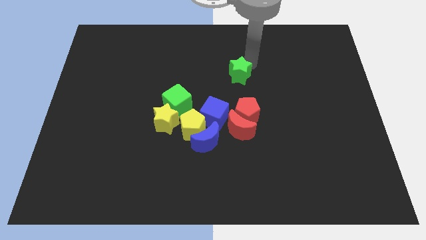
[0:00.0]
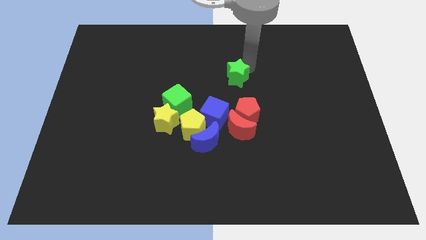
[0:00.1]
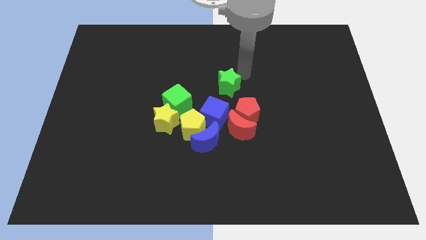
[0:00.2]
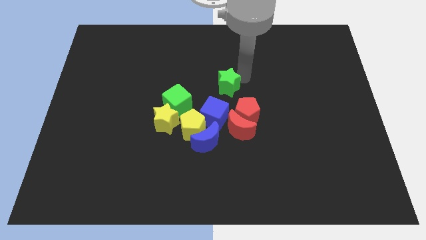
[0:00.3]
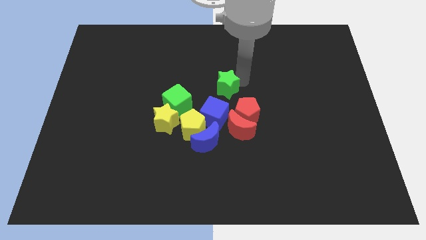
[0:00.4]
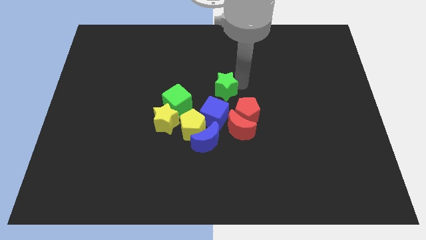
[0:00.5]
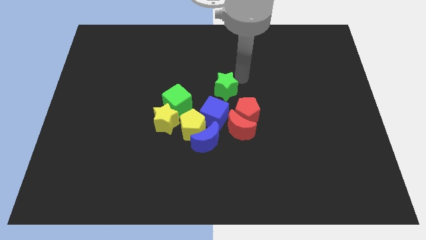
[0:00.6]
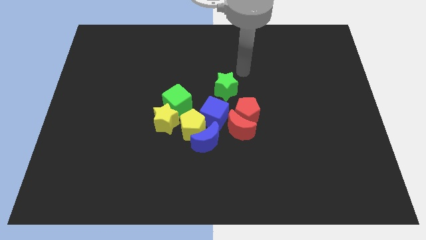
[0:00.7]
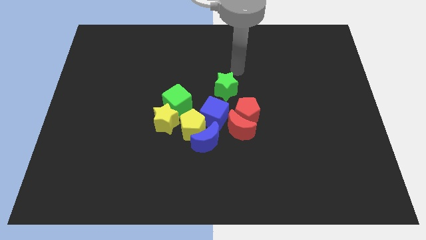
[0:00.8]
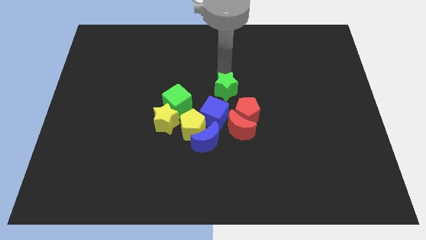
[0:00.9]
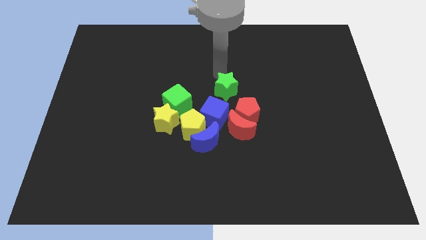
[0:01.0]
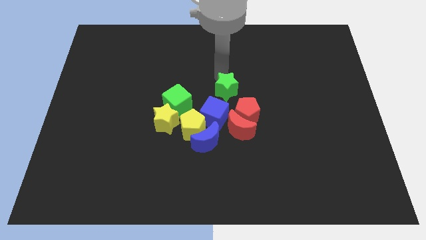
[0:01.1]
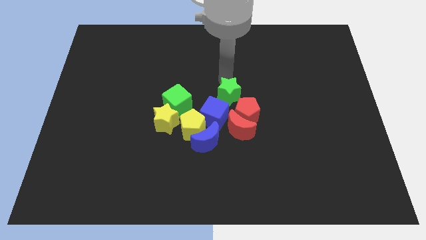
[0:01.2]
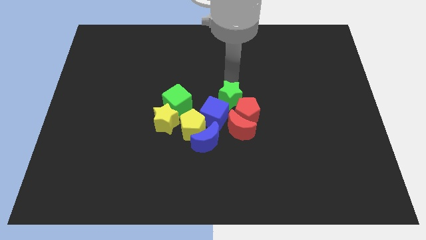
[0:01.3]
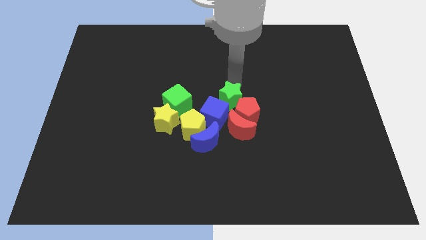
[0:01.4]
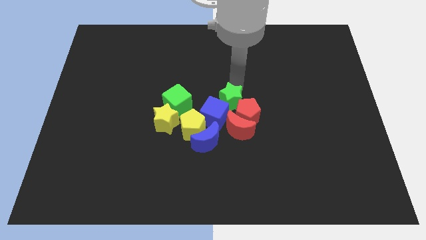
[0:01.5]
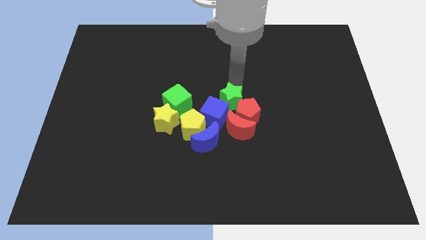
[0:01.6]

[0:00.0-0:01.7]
push the green star into the red pentagon

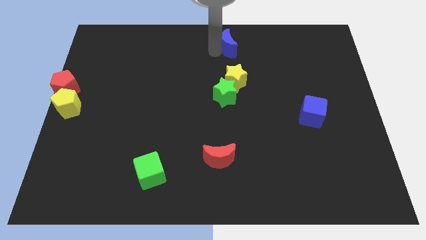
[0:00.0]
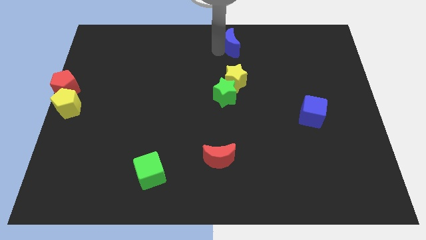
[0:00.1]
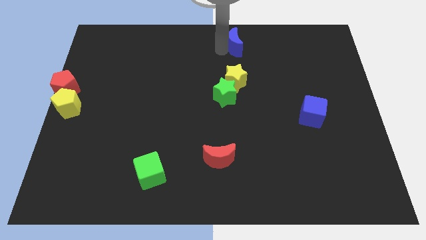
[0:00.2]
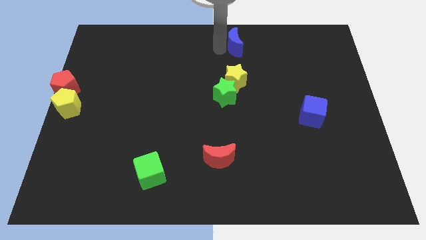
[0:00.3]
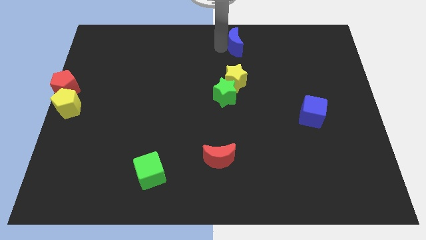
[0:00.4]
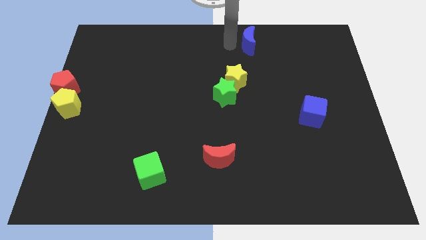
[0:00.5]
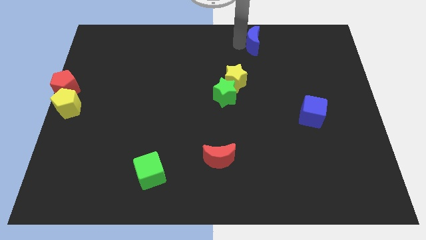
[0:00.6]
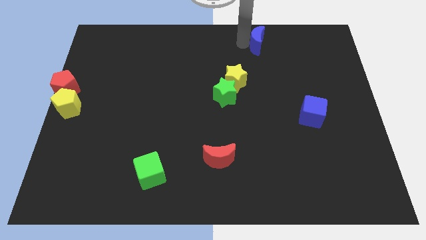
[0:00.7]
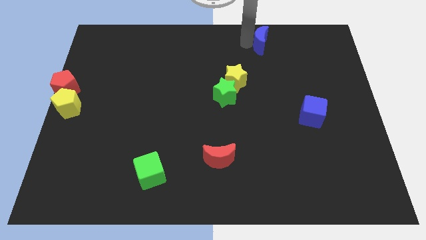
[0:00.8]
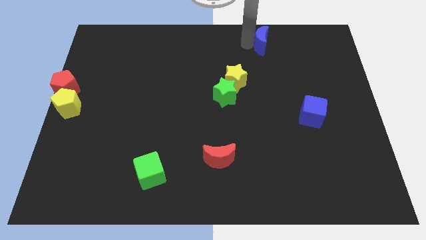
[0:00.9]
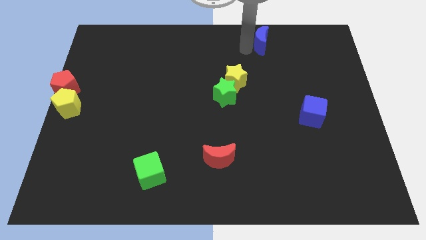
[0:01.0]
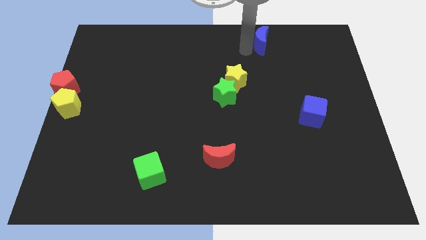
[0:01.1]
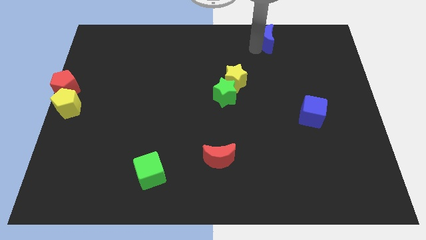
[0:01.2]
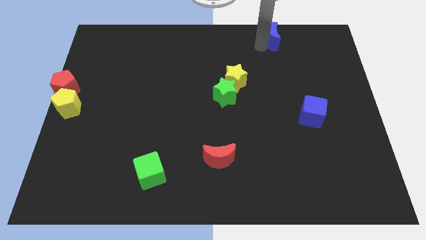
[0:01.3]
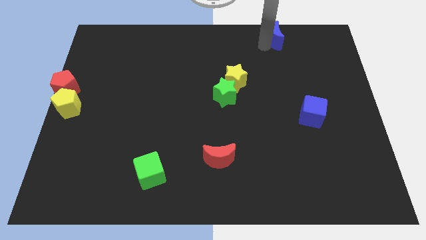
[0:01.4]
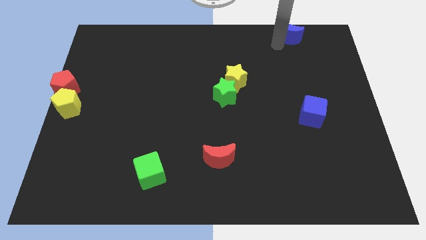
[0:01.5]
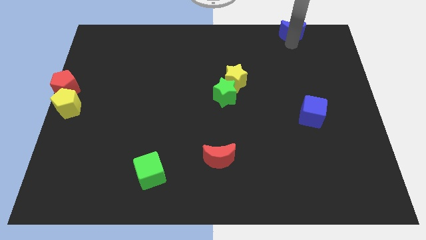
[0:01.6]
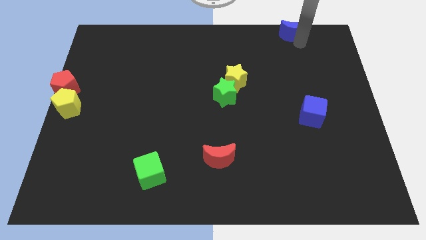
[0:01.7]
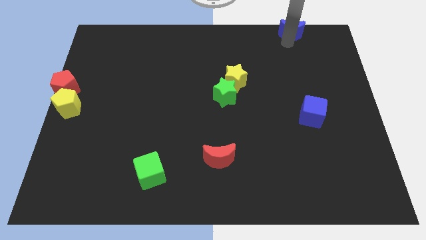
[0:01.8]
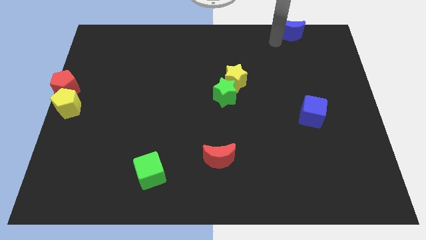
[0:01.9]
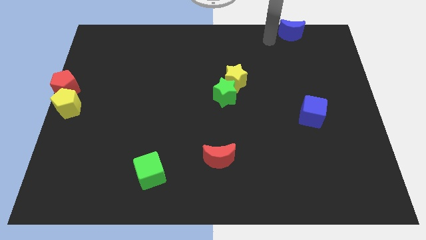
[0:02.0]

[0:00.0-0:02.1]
push blue moon to the top right side

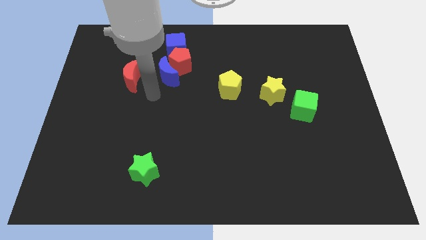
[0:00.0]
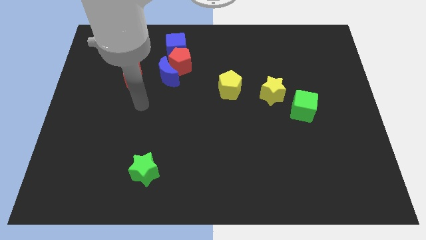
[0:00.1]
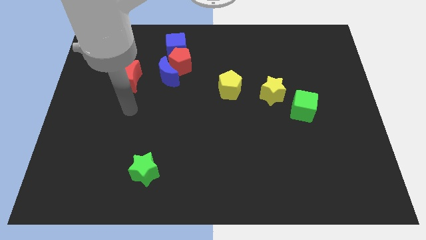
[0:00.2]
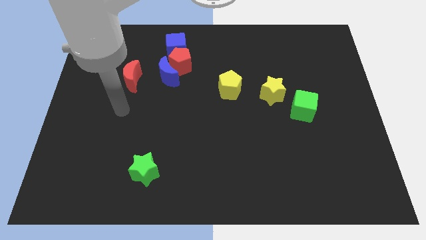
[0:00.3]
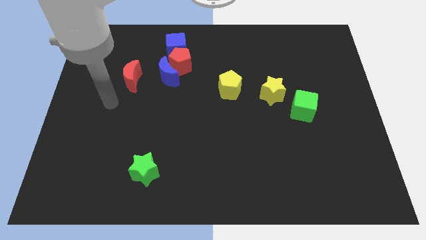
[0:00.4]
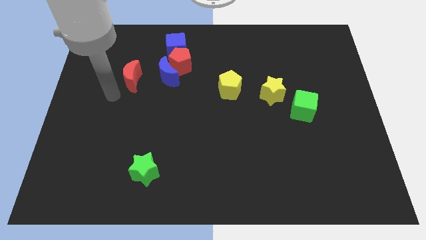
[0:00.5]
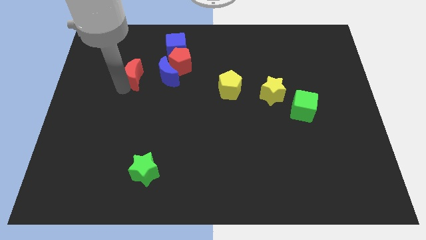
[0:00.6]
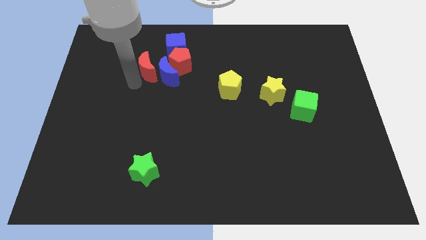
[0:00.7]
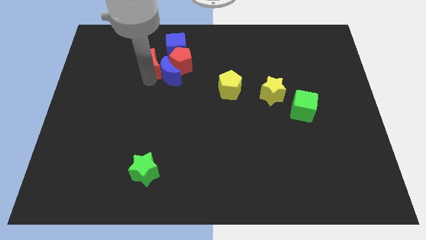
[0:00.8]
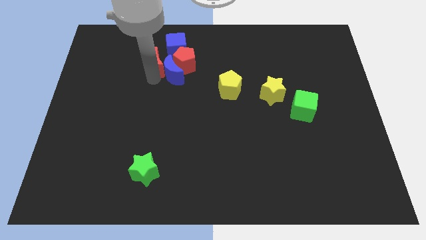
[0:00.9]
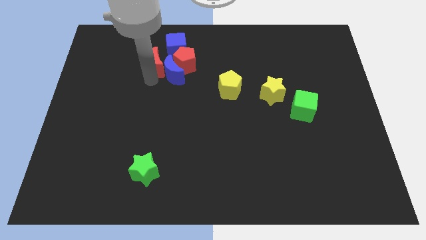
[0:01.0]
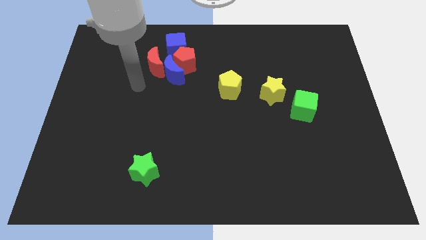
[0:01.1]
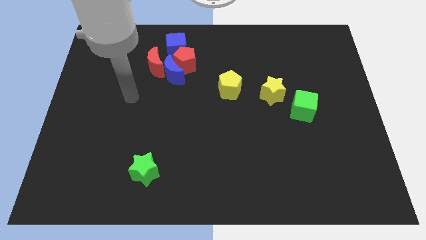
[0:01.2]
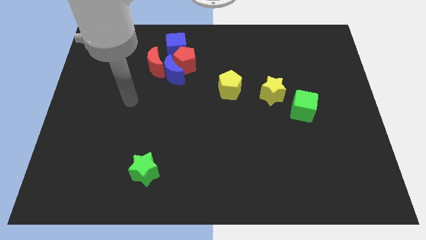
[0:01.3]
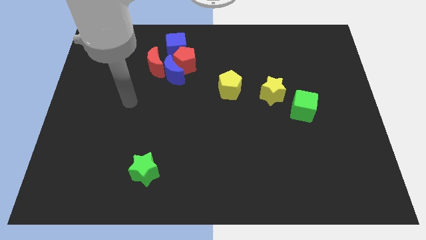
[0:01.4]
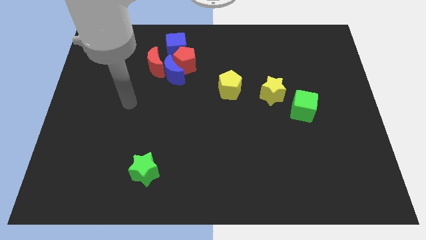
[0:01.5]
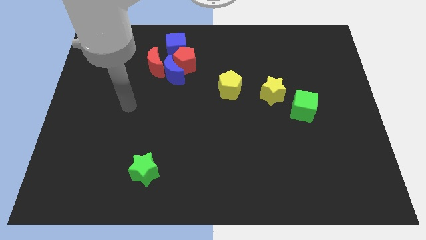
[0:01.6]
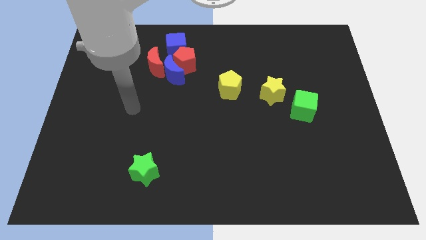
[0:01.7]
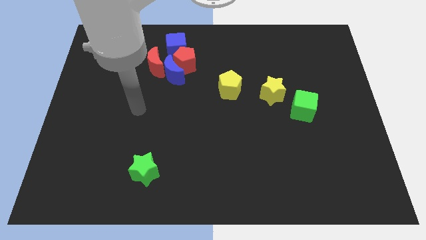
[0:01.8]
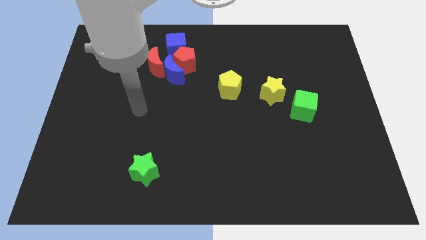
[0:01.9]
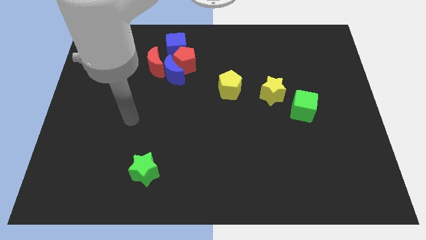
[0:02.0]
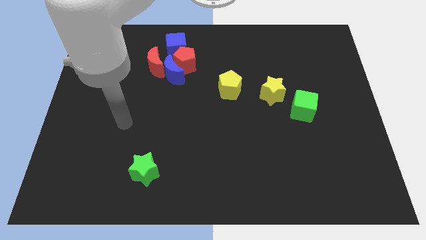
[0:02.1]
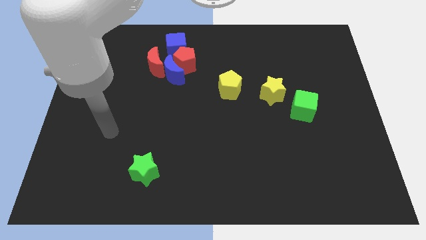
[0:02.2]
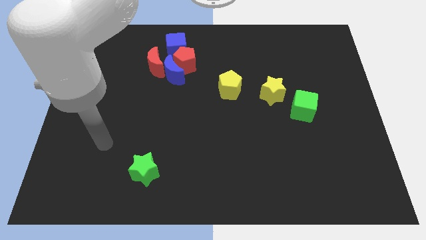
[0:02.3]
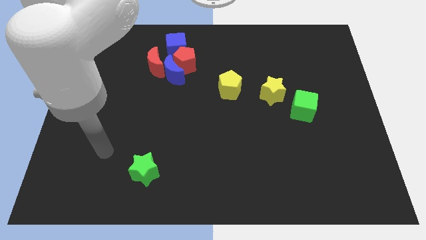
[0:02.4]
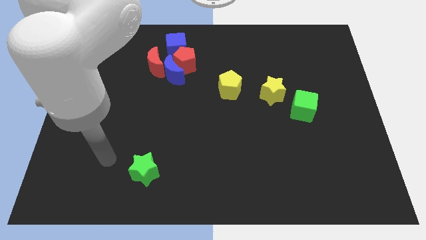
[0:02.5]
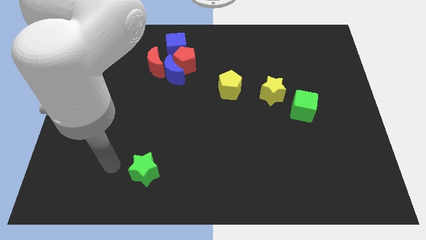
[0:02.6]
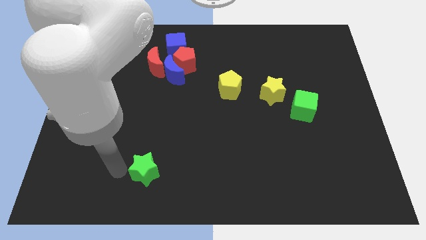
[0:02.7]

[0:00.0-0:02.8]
push the red crescent to the left of the blue crescent

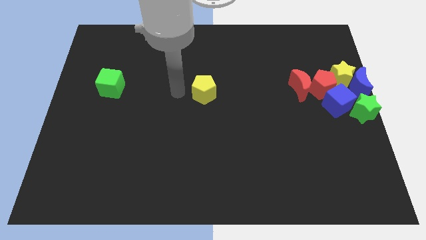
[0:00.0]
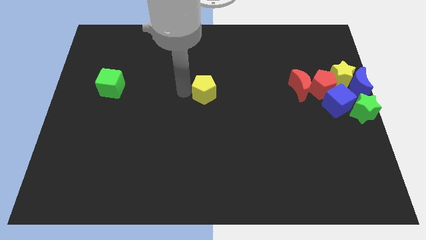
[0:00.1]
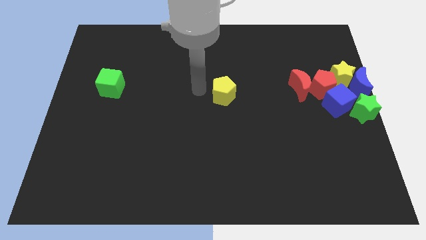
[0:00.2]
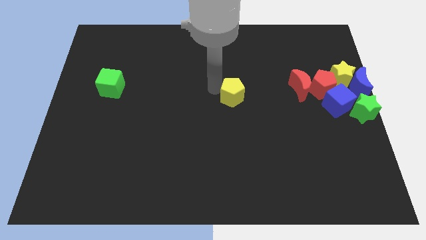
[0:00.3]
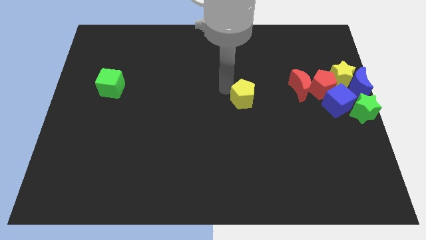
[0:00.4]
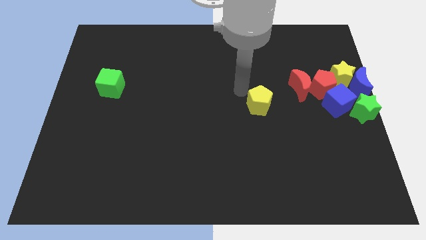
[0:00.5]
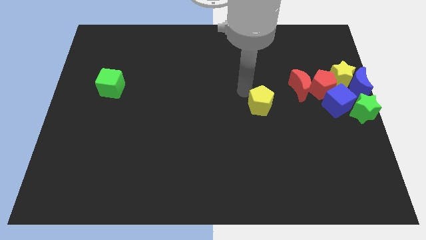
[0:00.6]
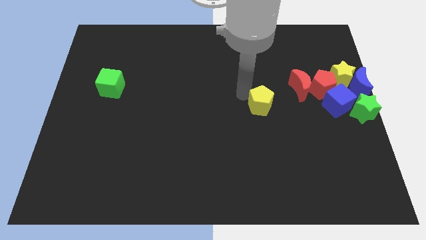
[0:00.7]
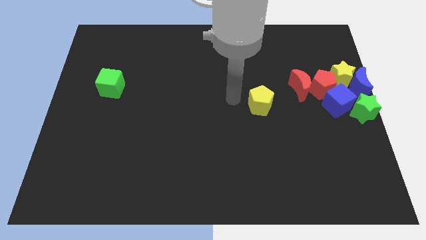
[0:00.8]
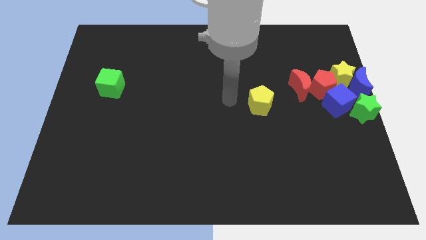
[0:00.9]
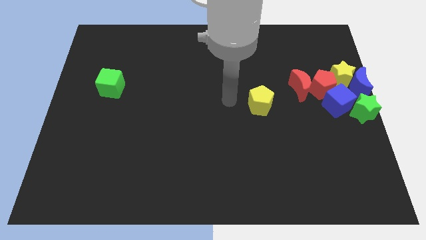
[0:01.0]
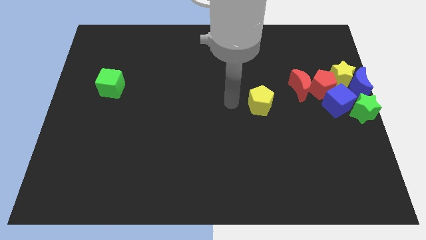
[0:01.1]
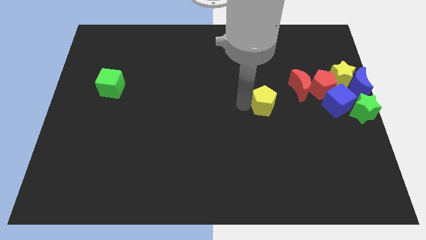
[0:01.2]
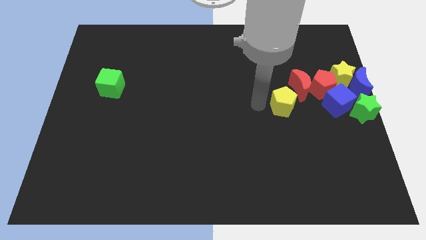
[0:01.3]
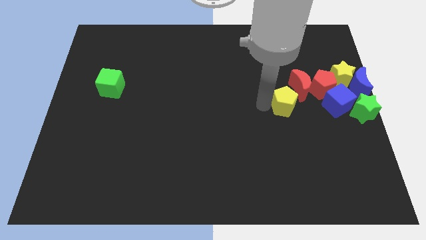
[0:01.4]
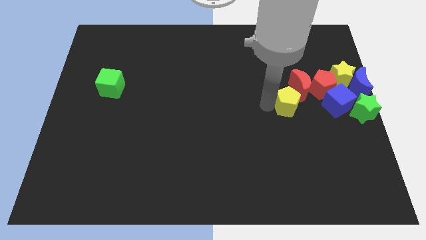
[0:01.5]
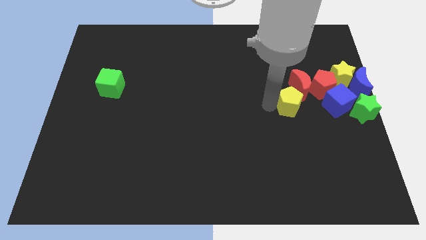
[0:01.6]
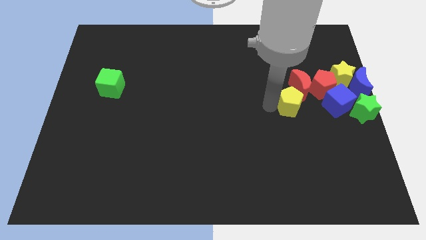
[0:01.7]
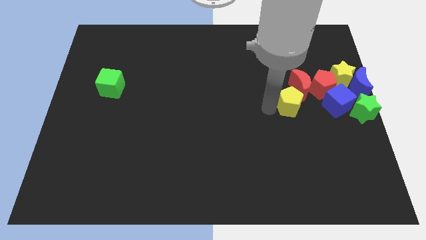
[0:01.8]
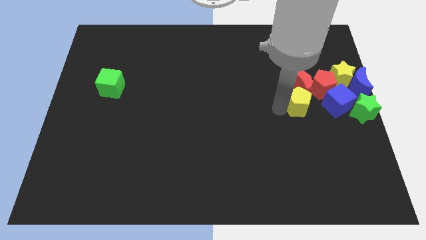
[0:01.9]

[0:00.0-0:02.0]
push the yellow pentagon below the red crescent

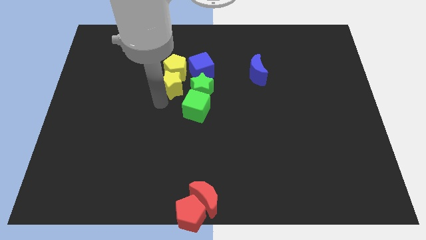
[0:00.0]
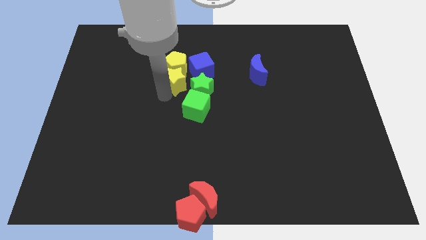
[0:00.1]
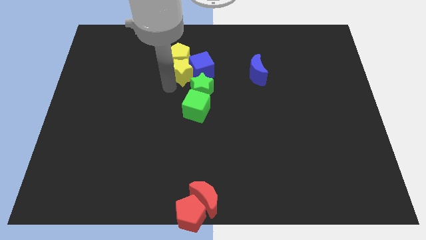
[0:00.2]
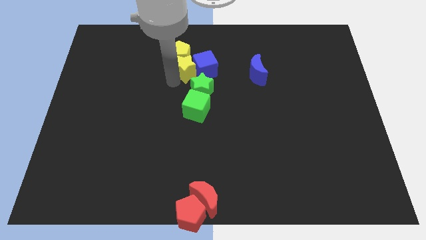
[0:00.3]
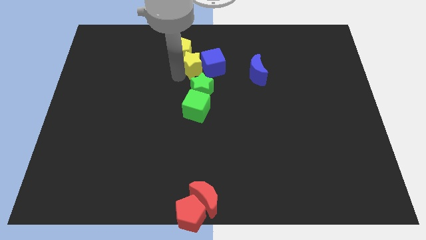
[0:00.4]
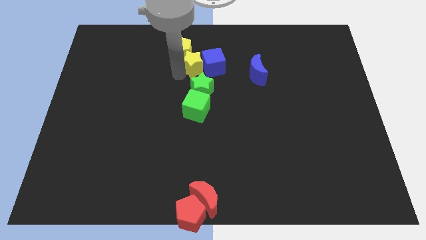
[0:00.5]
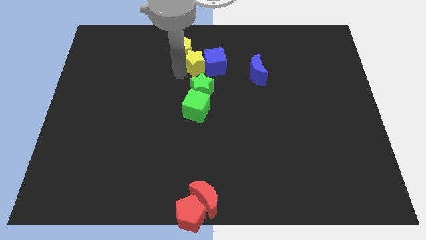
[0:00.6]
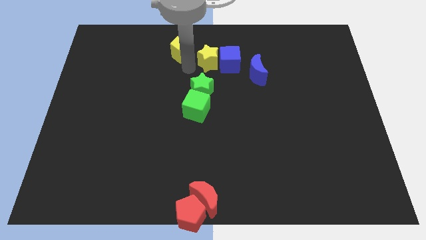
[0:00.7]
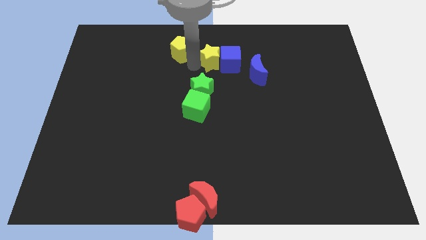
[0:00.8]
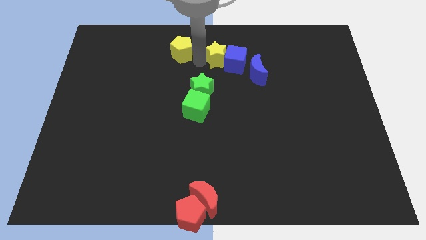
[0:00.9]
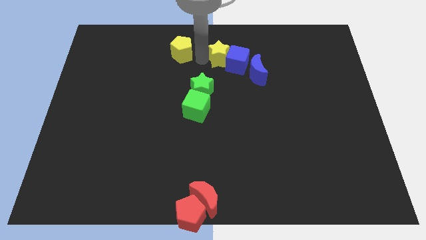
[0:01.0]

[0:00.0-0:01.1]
separate yellow blocks from each other
